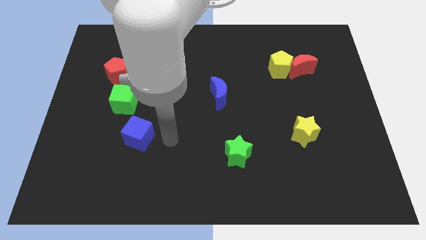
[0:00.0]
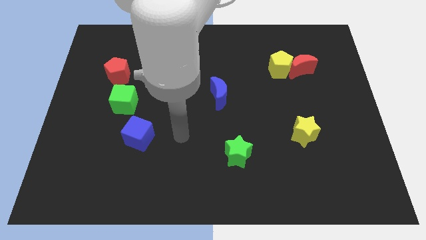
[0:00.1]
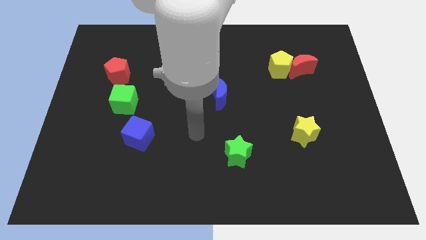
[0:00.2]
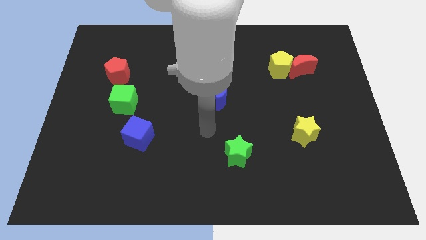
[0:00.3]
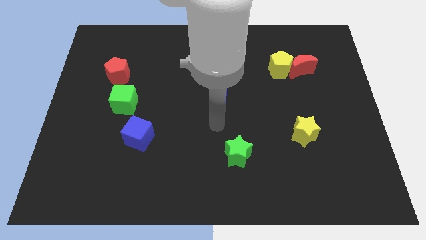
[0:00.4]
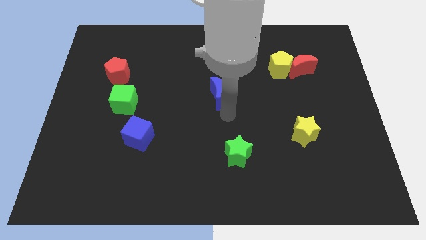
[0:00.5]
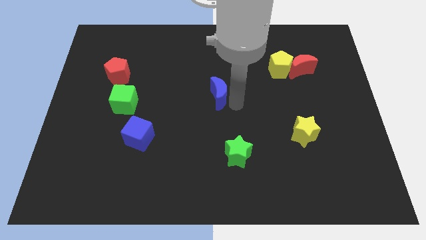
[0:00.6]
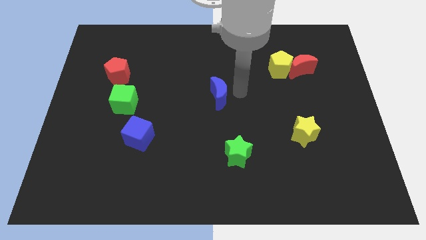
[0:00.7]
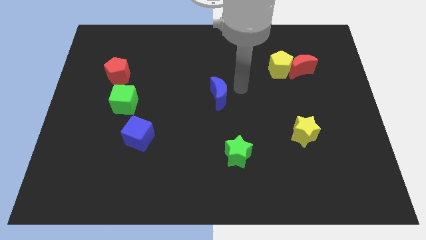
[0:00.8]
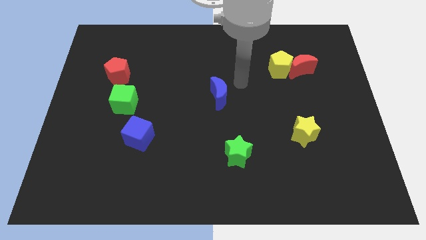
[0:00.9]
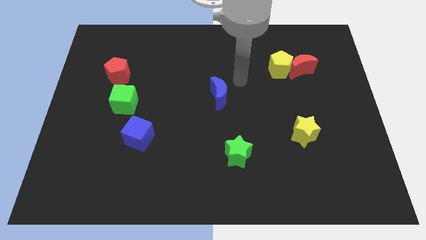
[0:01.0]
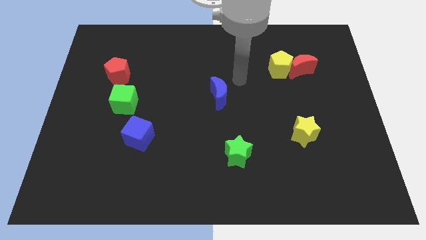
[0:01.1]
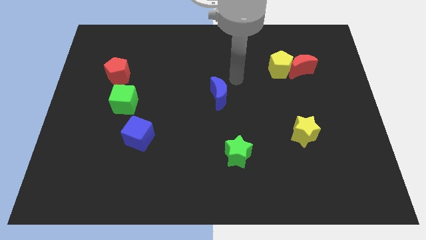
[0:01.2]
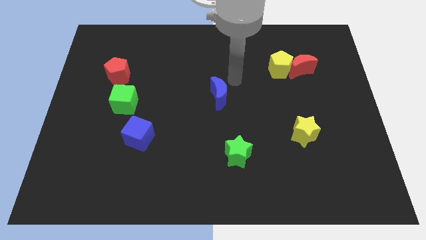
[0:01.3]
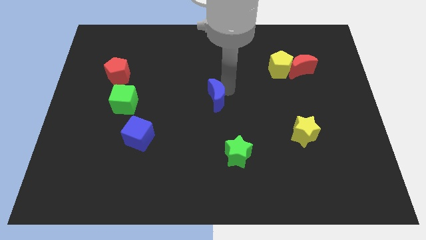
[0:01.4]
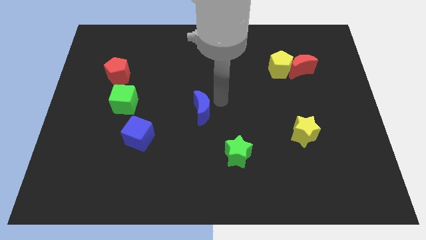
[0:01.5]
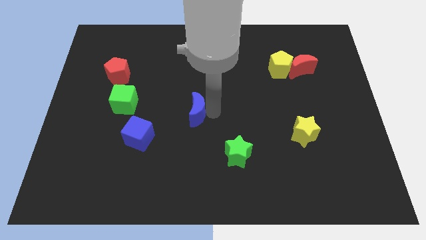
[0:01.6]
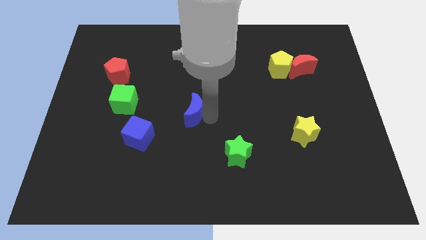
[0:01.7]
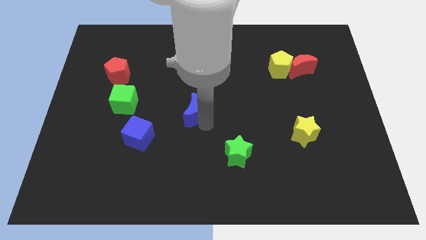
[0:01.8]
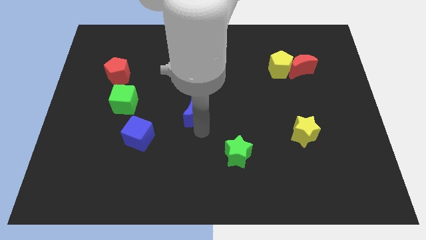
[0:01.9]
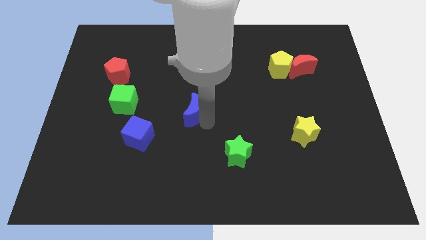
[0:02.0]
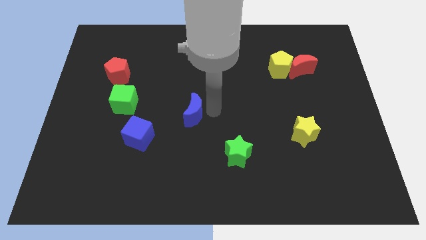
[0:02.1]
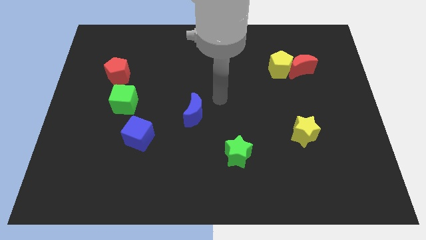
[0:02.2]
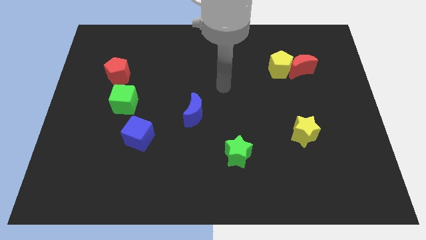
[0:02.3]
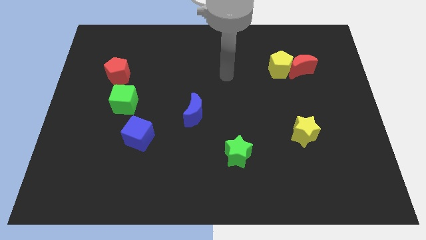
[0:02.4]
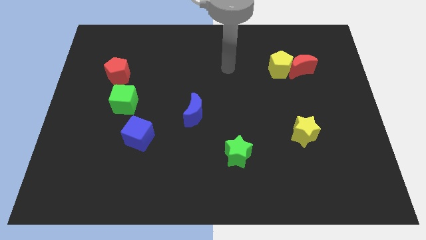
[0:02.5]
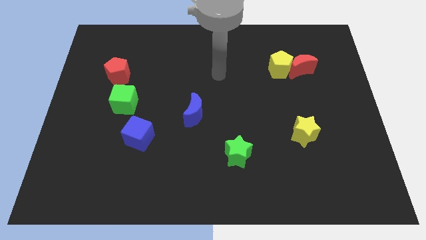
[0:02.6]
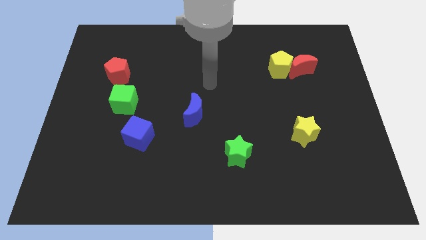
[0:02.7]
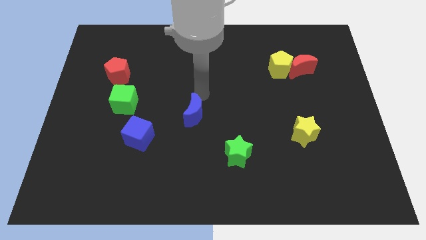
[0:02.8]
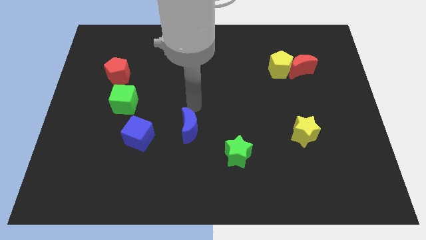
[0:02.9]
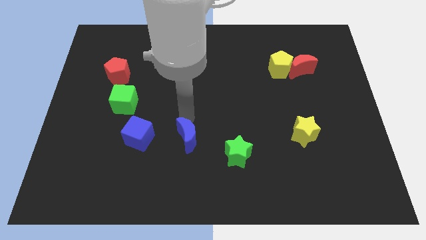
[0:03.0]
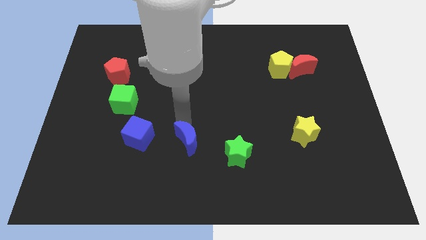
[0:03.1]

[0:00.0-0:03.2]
move the blue crescent to the right of the blue cube

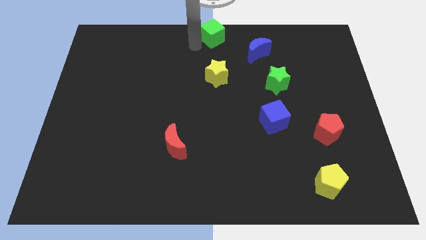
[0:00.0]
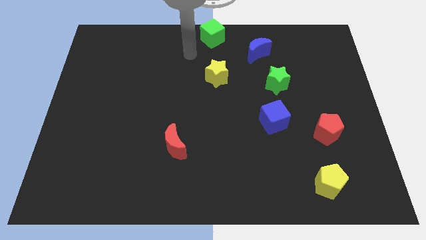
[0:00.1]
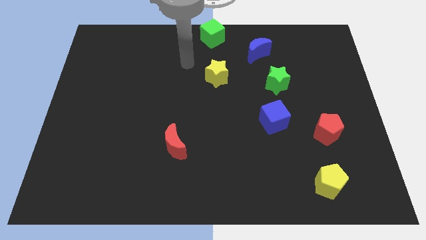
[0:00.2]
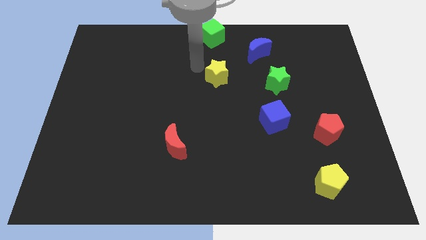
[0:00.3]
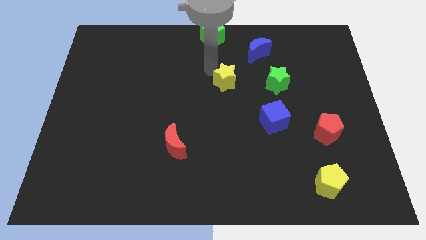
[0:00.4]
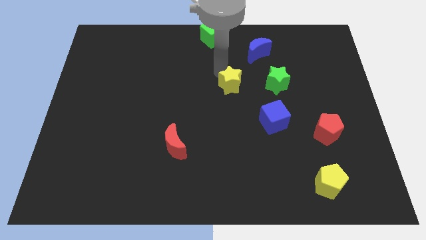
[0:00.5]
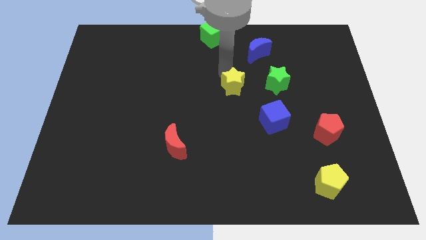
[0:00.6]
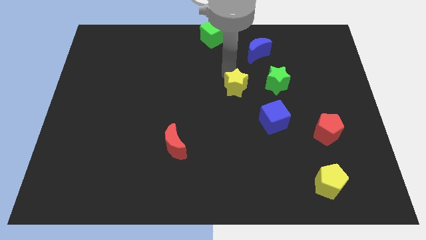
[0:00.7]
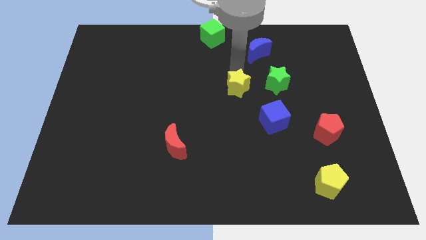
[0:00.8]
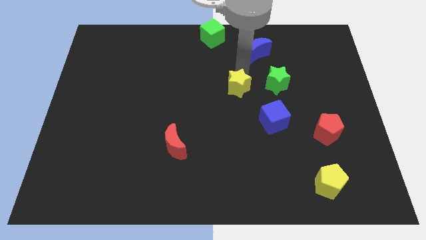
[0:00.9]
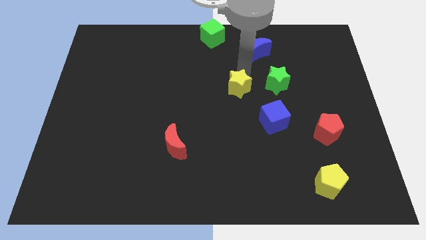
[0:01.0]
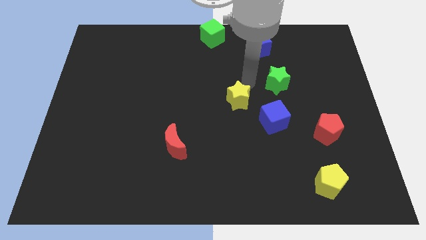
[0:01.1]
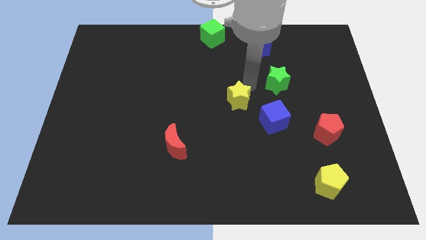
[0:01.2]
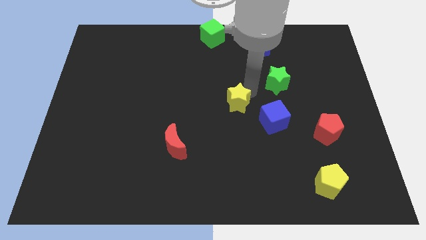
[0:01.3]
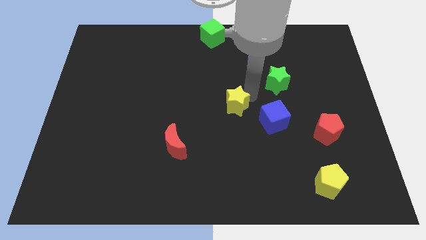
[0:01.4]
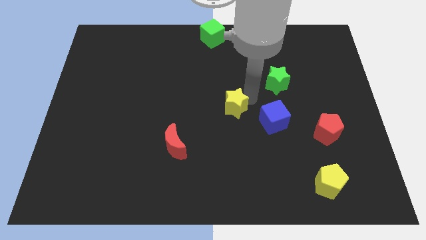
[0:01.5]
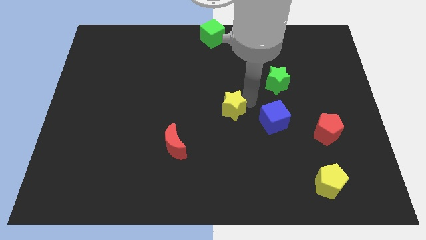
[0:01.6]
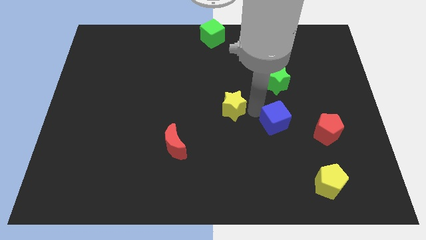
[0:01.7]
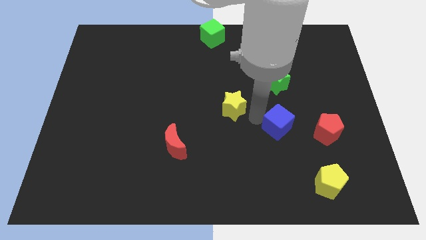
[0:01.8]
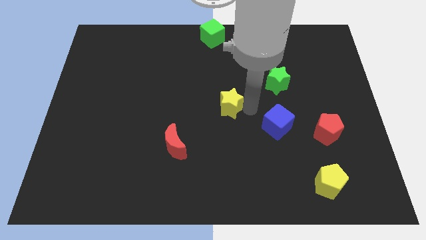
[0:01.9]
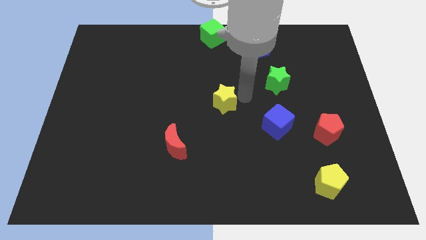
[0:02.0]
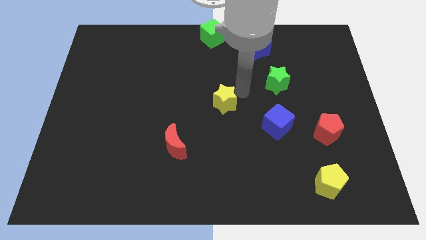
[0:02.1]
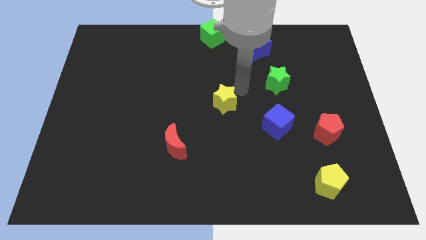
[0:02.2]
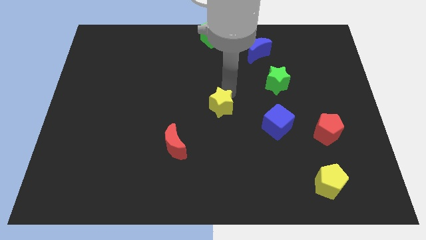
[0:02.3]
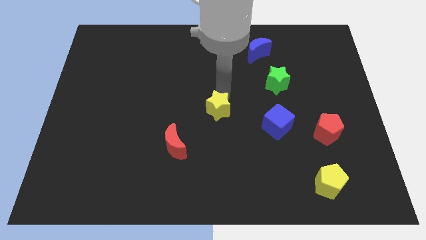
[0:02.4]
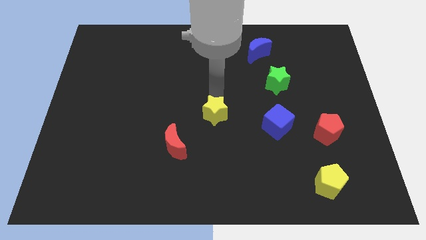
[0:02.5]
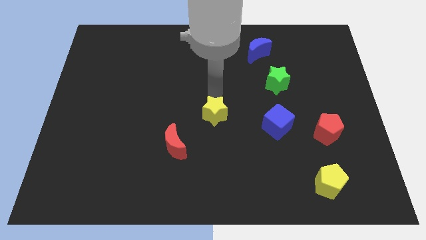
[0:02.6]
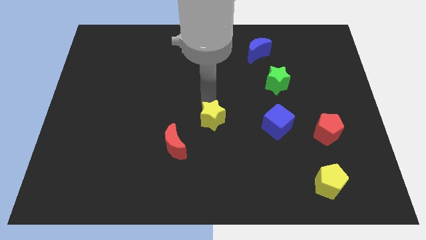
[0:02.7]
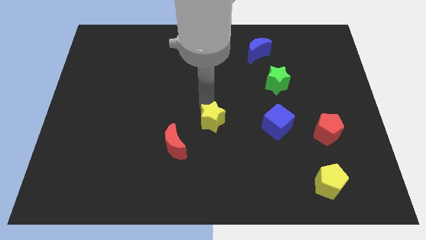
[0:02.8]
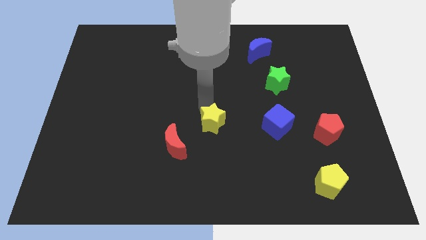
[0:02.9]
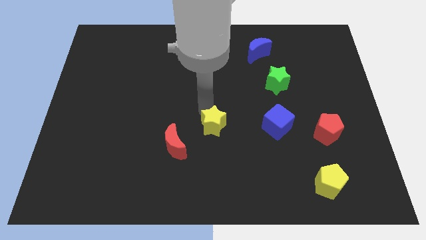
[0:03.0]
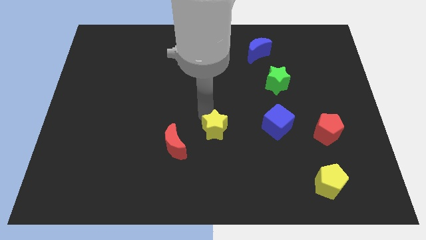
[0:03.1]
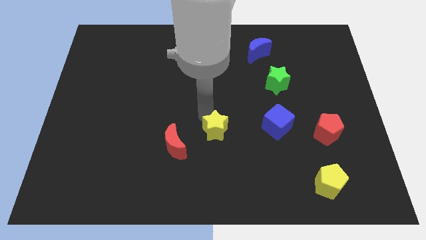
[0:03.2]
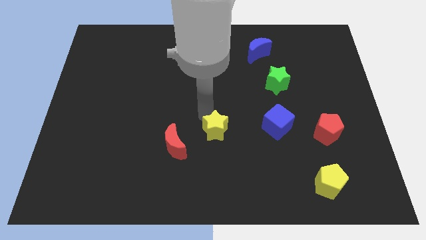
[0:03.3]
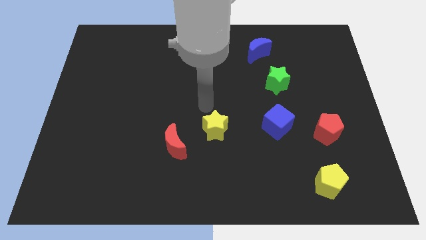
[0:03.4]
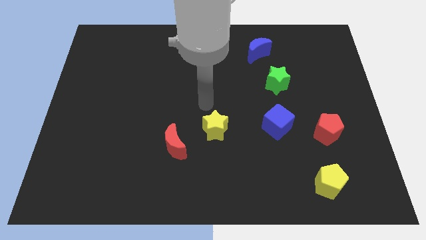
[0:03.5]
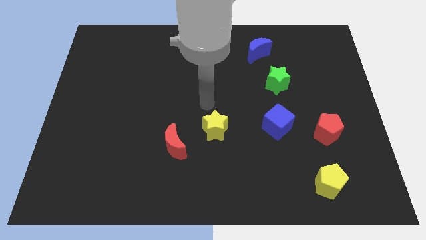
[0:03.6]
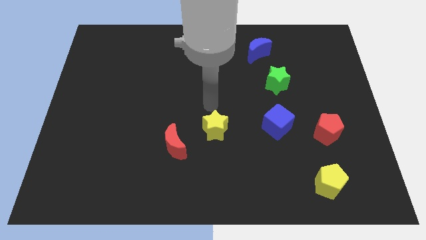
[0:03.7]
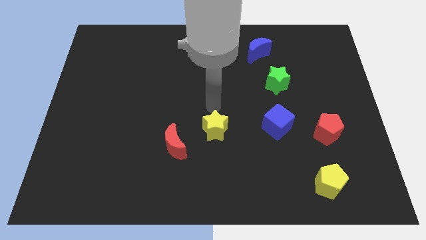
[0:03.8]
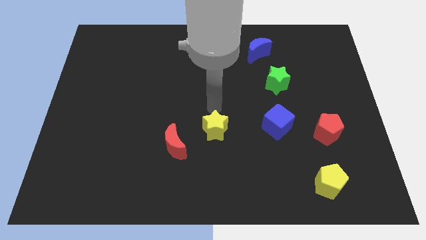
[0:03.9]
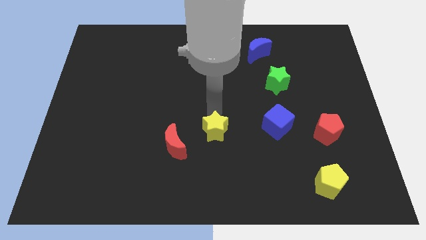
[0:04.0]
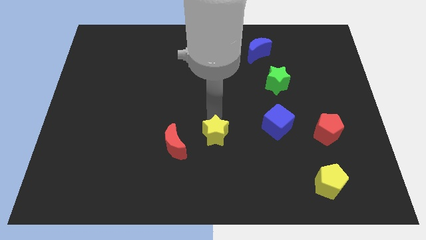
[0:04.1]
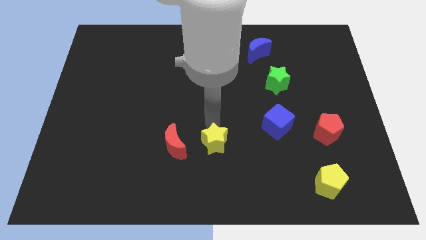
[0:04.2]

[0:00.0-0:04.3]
place the yellow star in between the red moon and blue cube

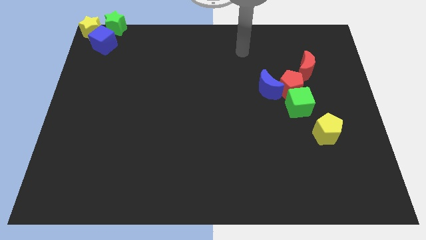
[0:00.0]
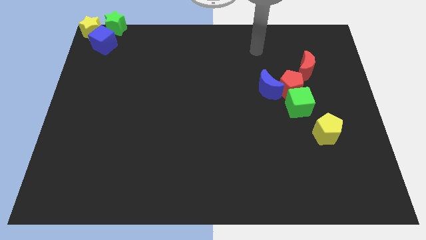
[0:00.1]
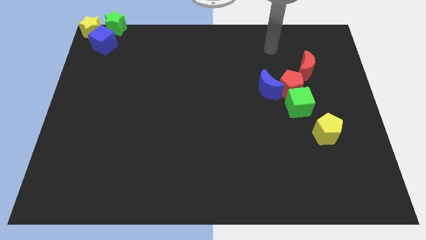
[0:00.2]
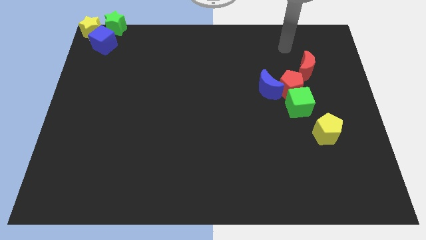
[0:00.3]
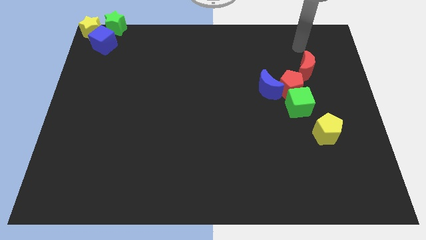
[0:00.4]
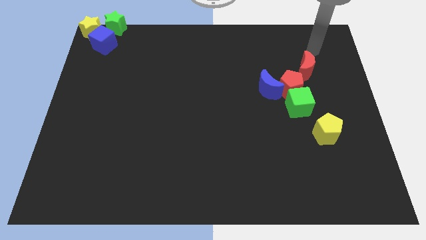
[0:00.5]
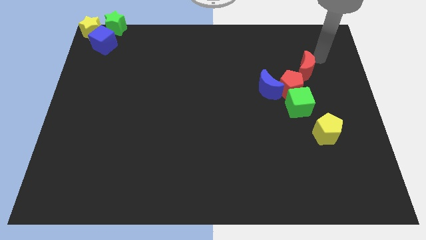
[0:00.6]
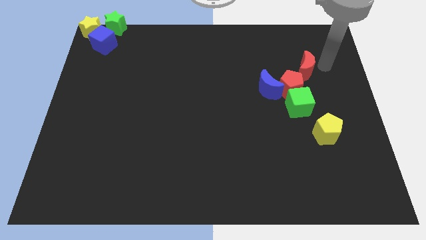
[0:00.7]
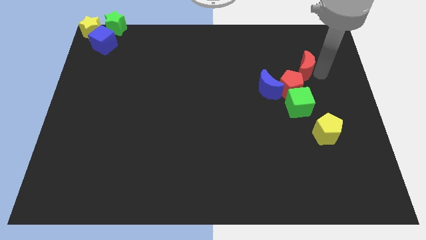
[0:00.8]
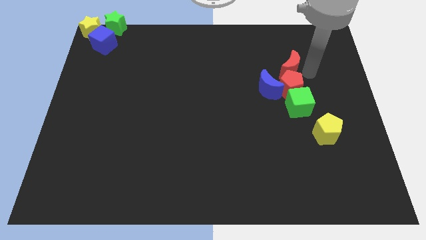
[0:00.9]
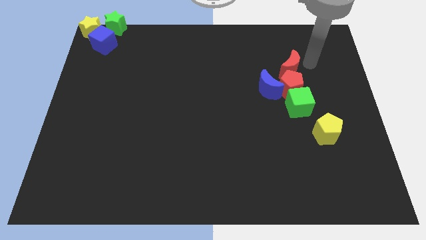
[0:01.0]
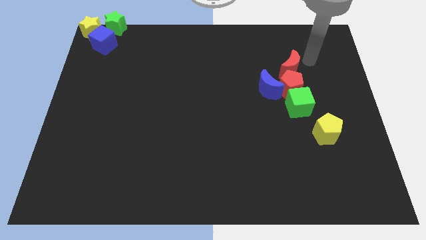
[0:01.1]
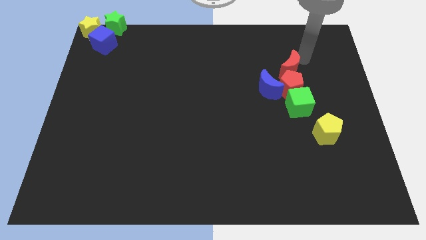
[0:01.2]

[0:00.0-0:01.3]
move tred moon to the top of the red pentagon
